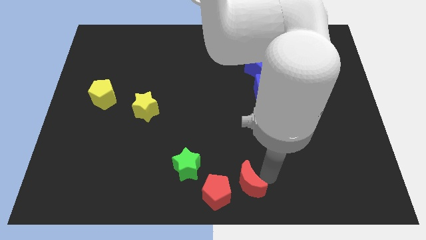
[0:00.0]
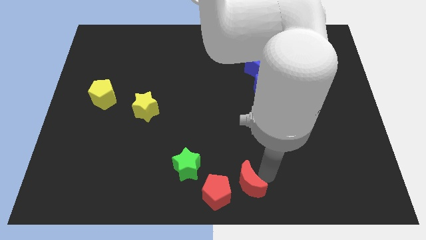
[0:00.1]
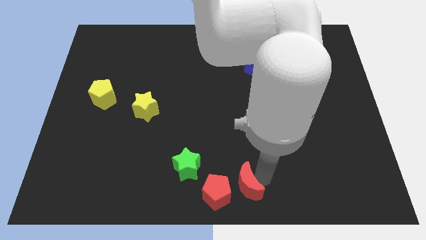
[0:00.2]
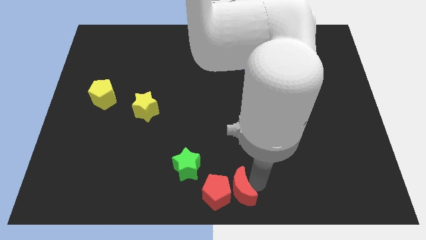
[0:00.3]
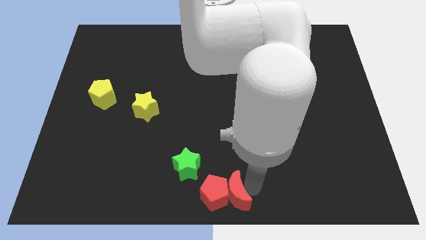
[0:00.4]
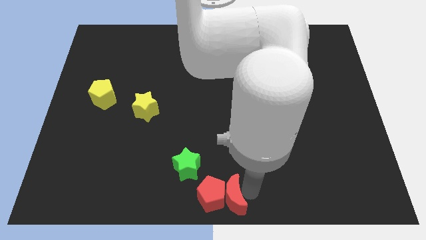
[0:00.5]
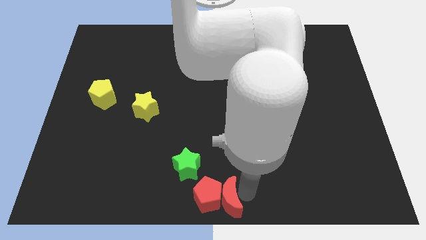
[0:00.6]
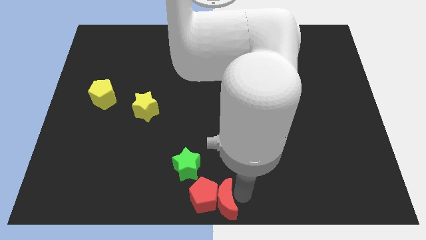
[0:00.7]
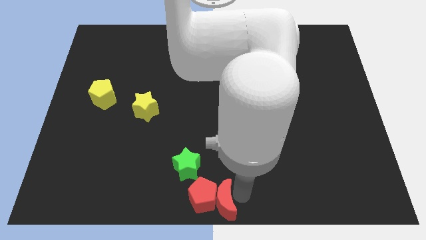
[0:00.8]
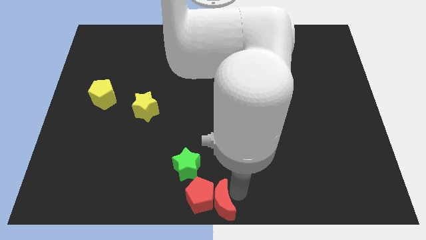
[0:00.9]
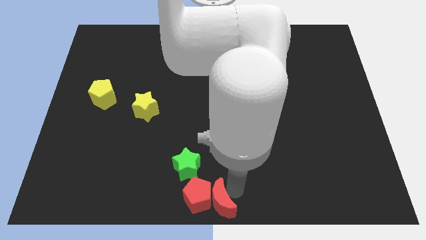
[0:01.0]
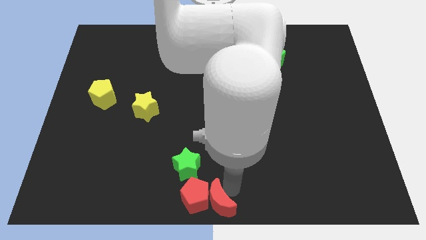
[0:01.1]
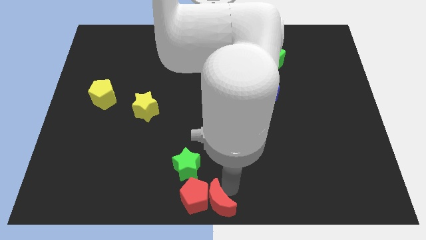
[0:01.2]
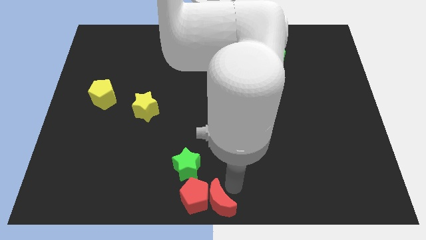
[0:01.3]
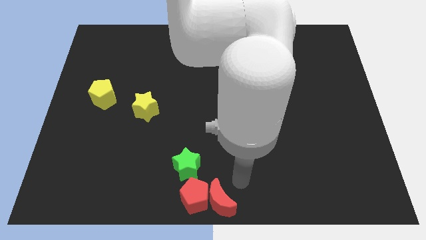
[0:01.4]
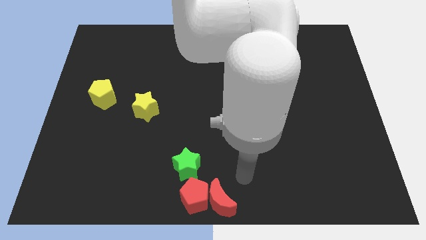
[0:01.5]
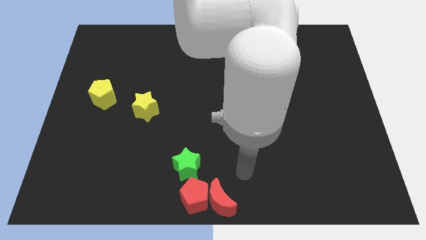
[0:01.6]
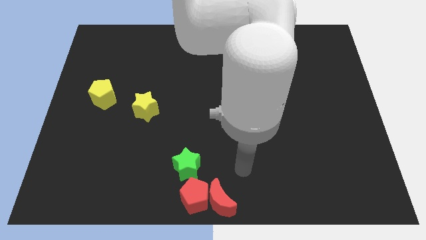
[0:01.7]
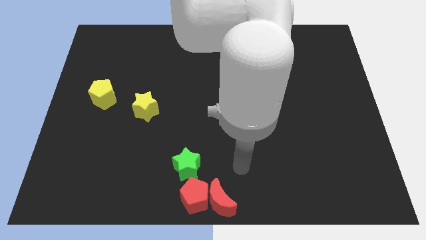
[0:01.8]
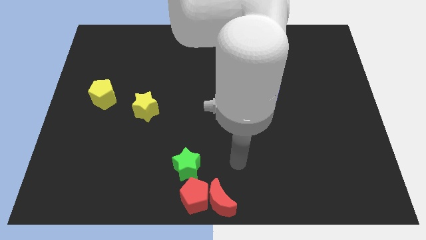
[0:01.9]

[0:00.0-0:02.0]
move the red blocks to the bottom center of the board

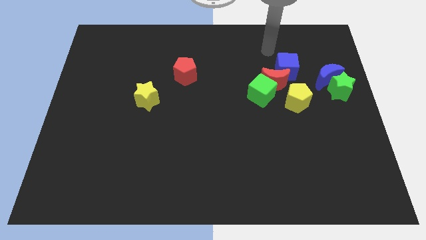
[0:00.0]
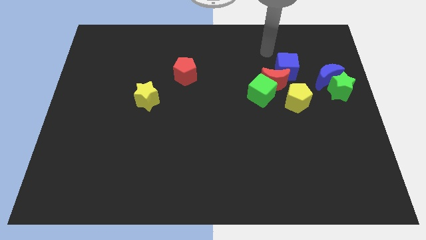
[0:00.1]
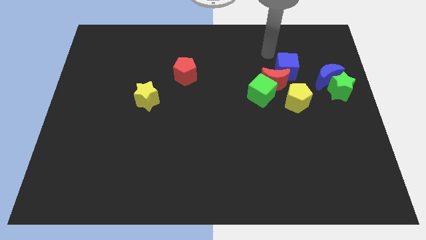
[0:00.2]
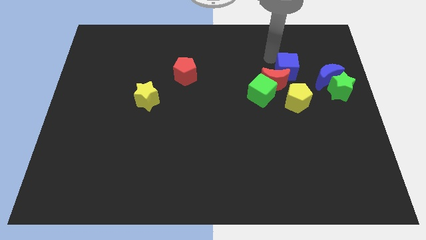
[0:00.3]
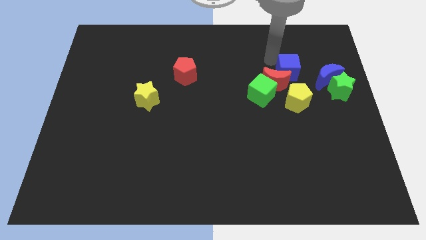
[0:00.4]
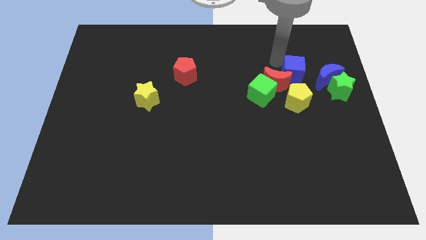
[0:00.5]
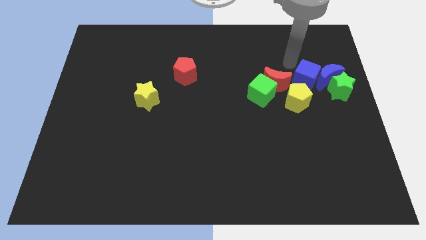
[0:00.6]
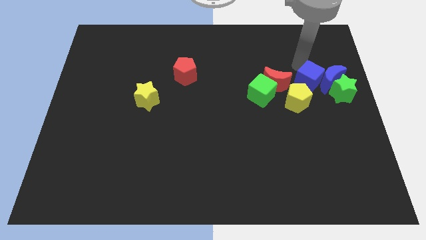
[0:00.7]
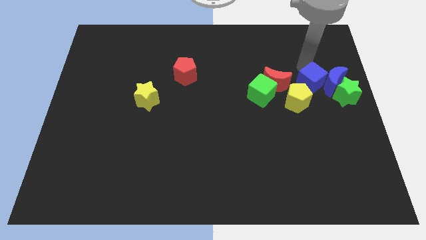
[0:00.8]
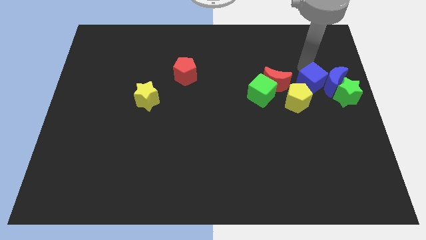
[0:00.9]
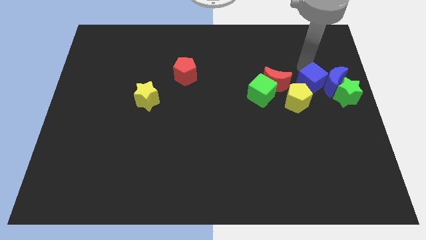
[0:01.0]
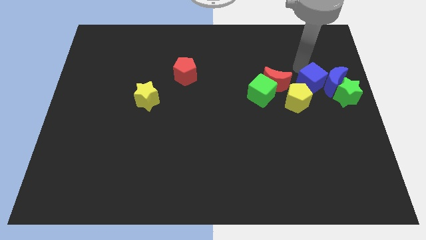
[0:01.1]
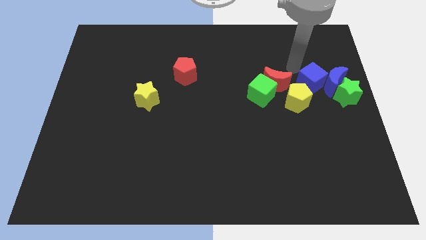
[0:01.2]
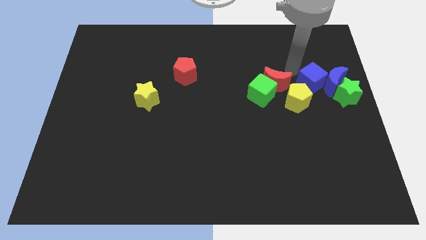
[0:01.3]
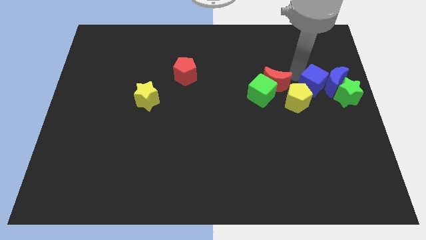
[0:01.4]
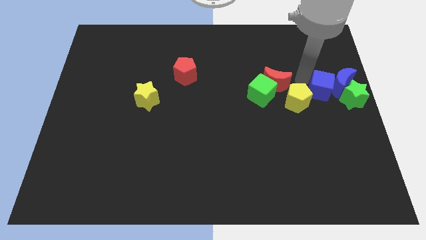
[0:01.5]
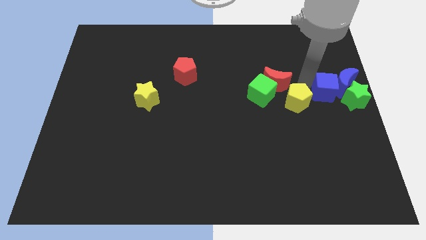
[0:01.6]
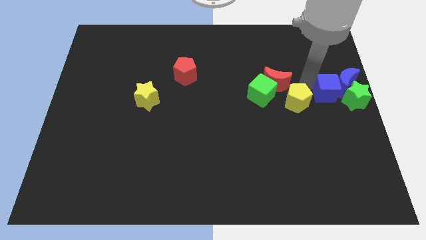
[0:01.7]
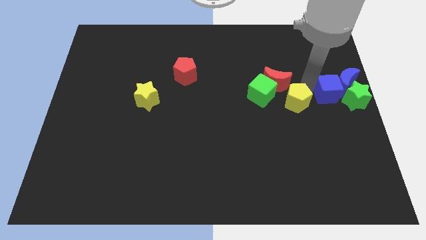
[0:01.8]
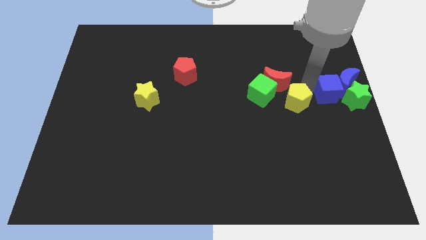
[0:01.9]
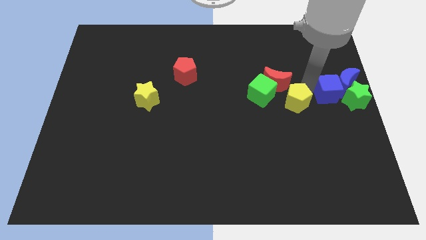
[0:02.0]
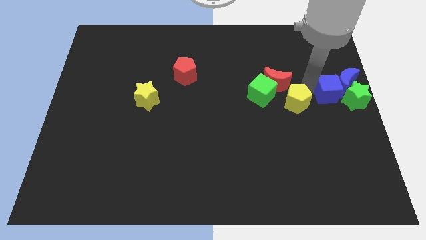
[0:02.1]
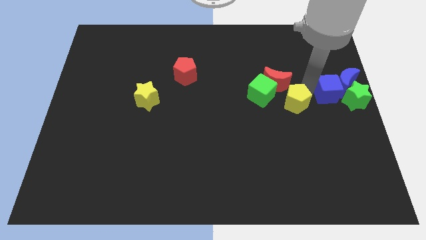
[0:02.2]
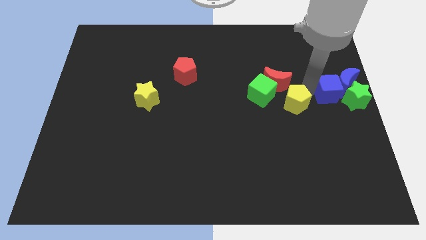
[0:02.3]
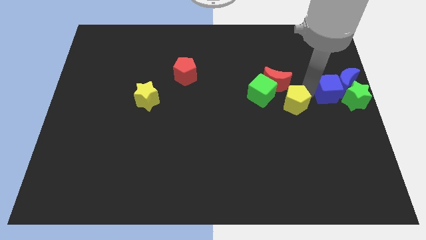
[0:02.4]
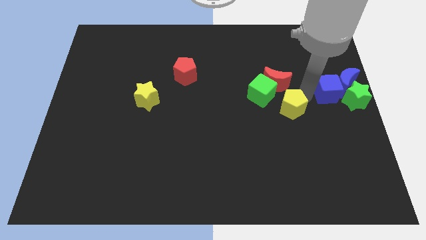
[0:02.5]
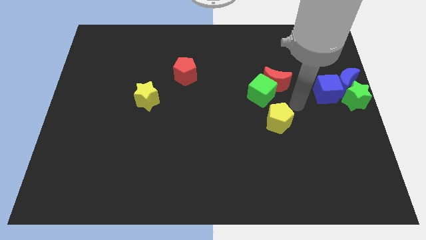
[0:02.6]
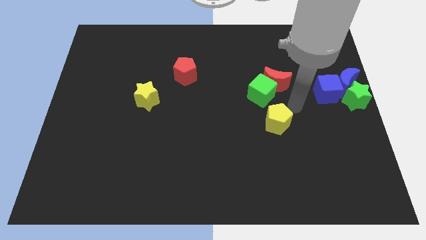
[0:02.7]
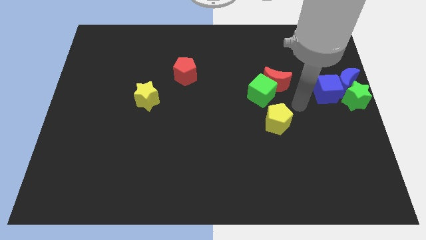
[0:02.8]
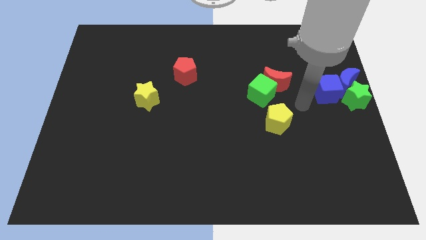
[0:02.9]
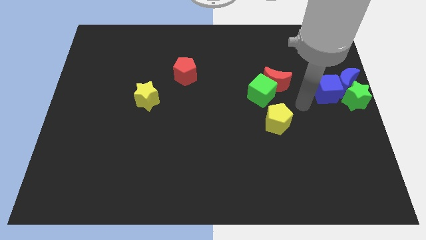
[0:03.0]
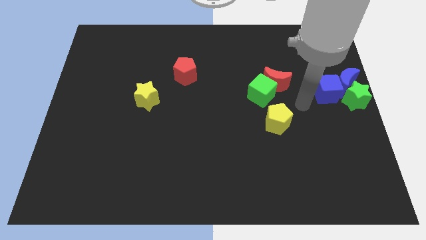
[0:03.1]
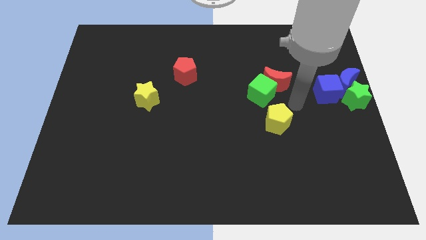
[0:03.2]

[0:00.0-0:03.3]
place the blue cube towards the bottom left side of the blue crescent

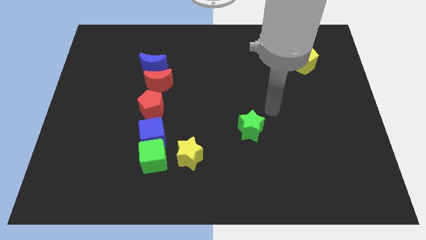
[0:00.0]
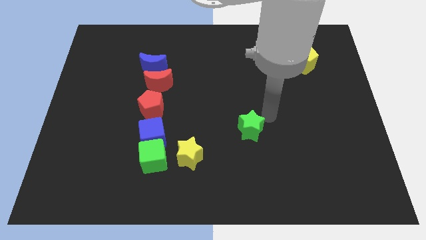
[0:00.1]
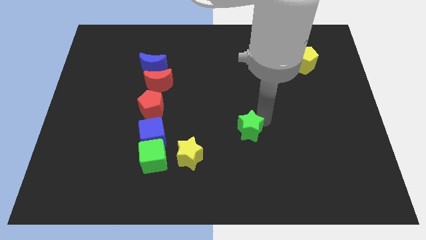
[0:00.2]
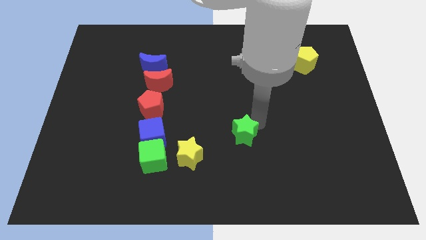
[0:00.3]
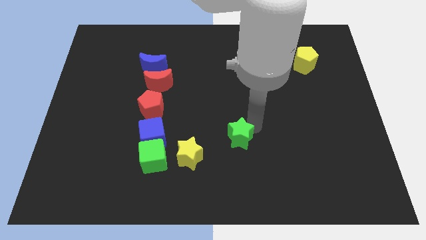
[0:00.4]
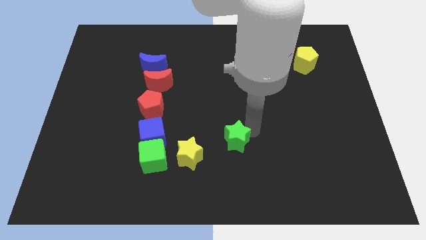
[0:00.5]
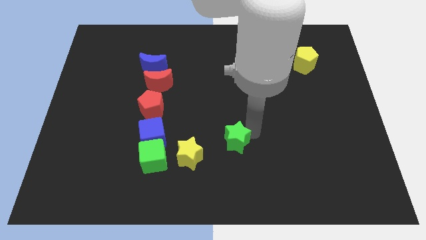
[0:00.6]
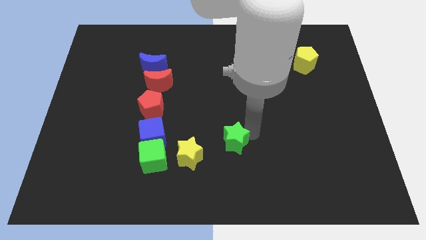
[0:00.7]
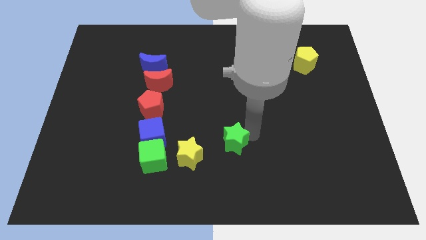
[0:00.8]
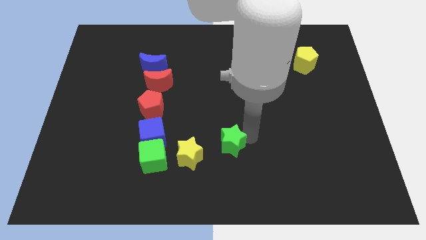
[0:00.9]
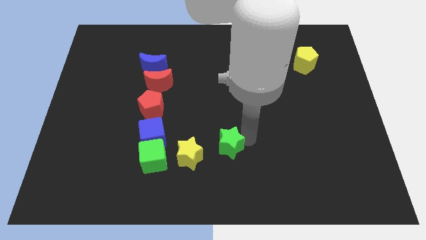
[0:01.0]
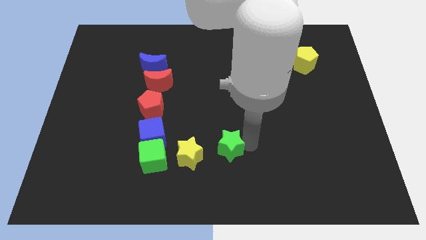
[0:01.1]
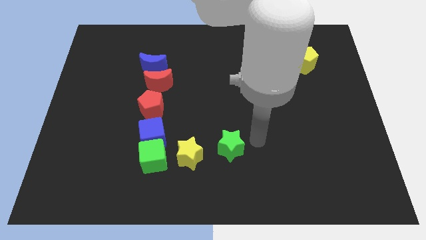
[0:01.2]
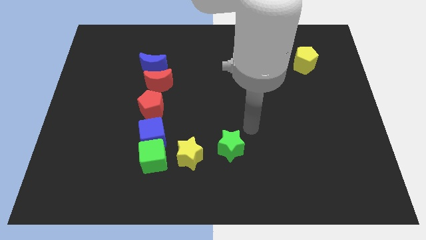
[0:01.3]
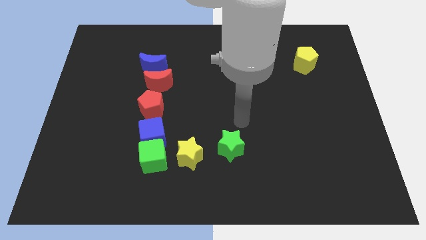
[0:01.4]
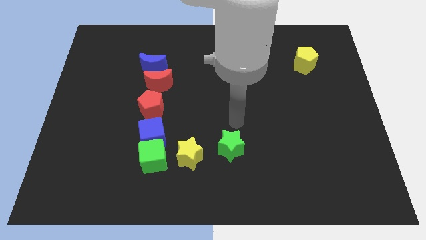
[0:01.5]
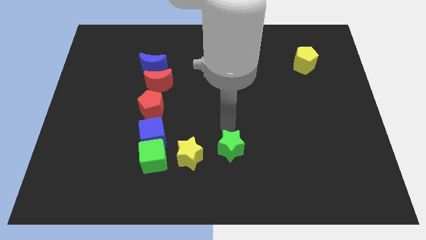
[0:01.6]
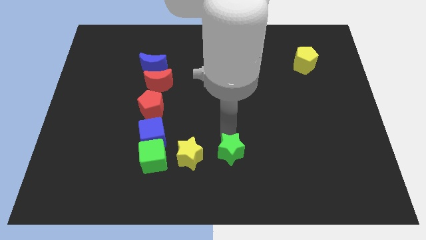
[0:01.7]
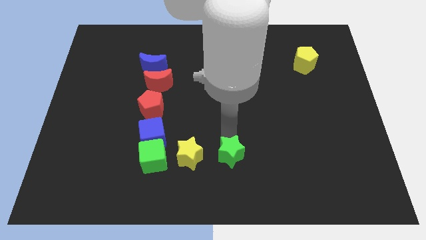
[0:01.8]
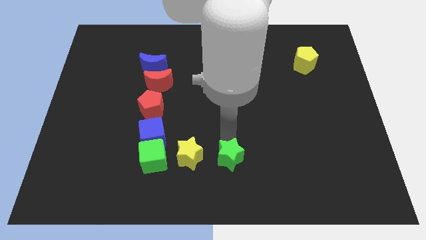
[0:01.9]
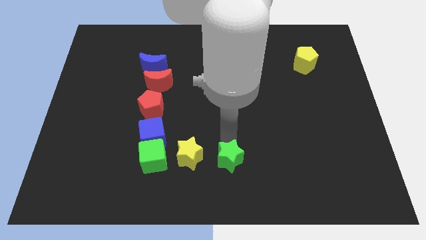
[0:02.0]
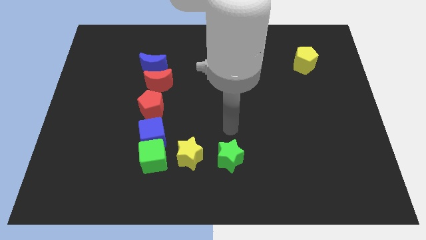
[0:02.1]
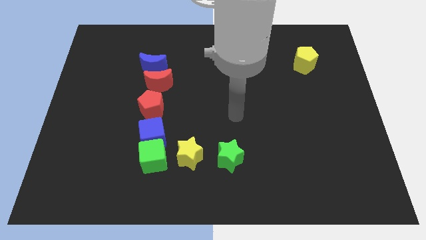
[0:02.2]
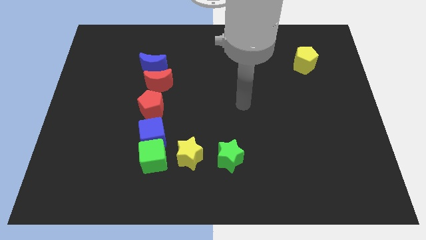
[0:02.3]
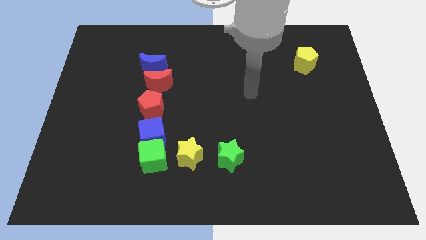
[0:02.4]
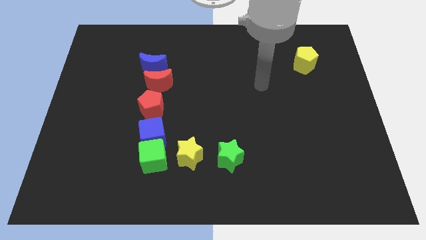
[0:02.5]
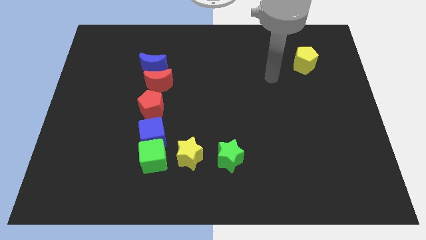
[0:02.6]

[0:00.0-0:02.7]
push the green star parallel to the yellow star

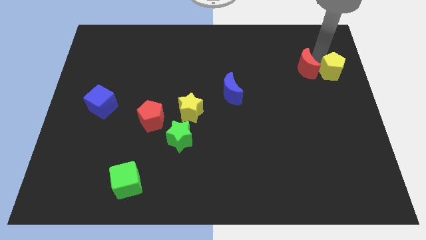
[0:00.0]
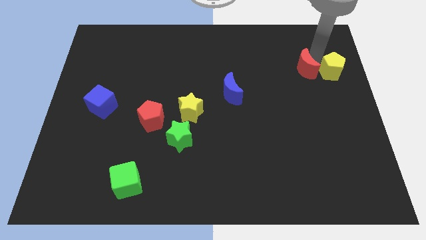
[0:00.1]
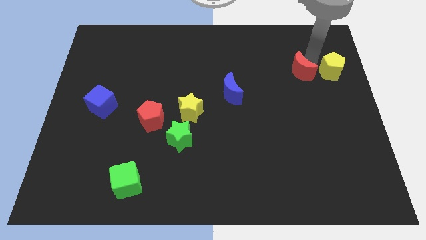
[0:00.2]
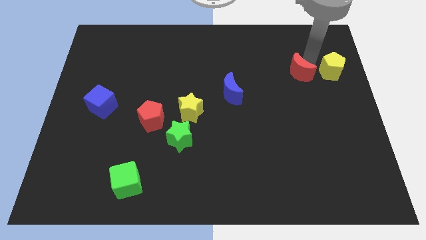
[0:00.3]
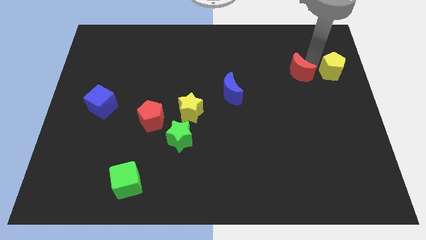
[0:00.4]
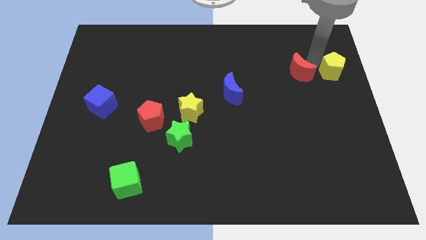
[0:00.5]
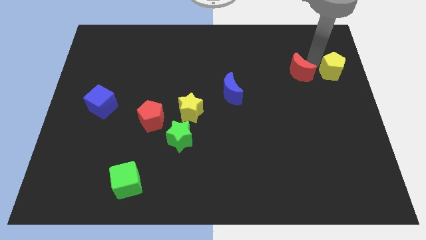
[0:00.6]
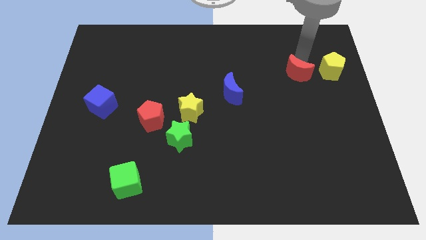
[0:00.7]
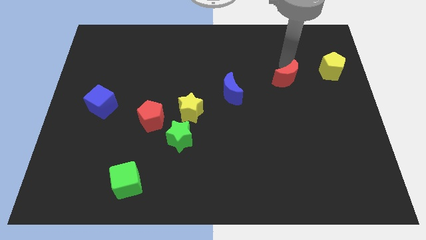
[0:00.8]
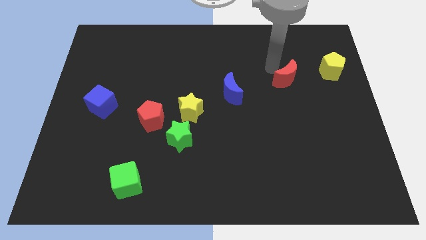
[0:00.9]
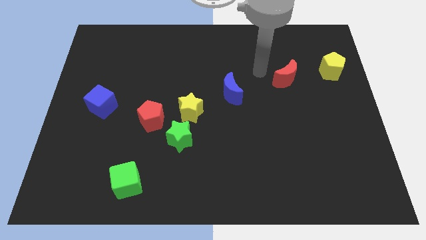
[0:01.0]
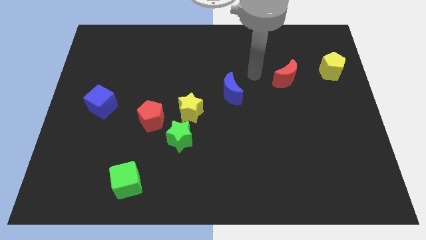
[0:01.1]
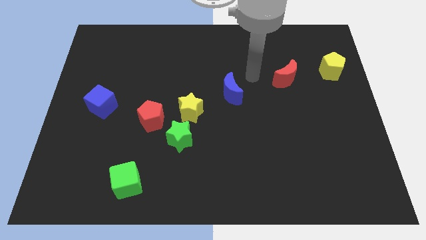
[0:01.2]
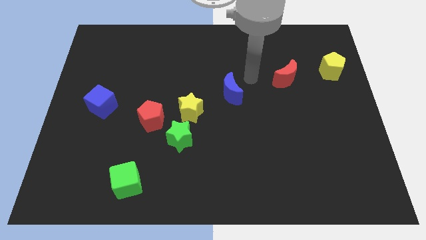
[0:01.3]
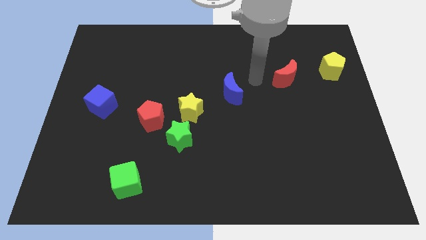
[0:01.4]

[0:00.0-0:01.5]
separate the red moon between blue crescent and yellow pentagon
